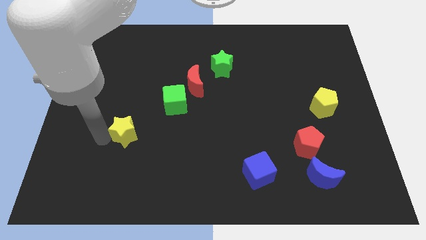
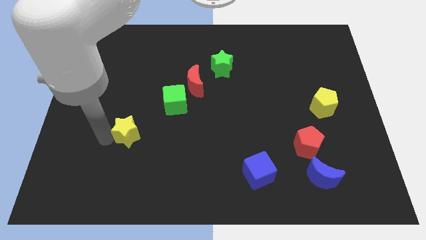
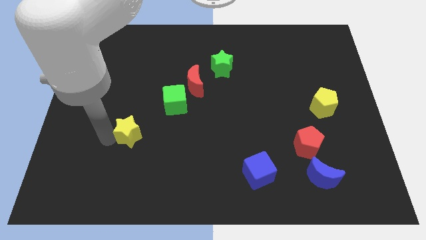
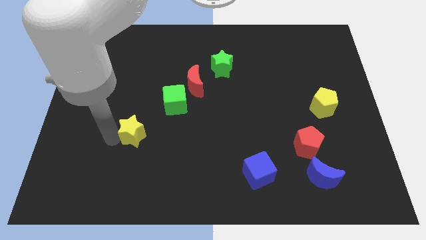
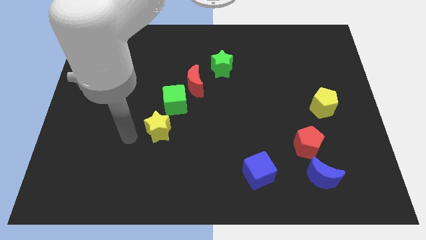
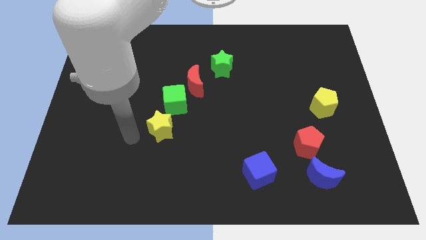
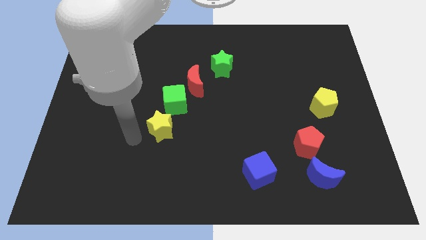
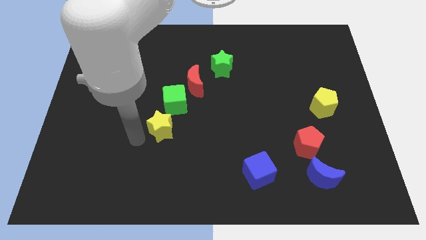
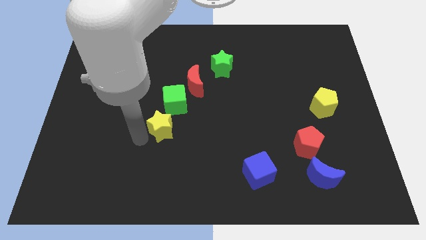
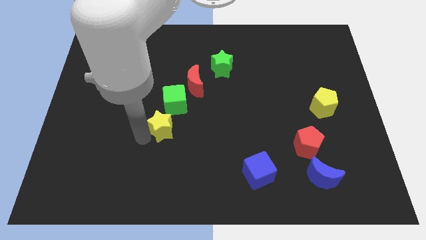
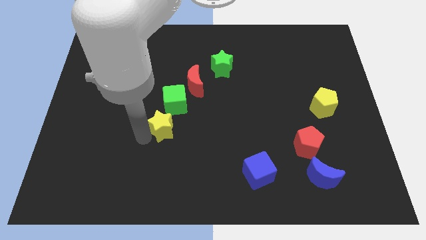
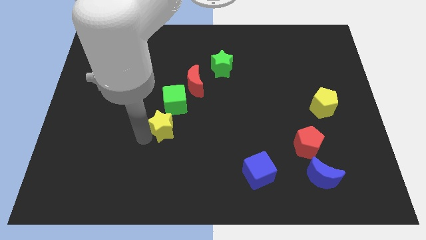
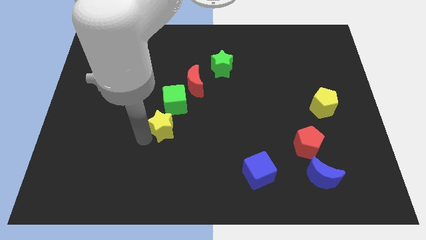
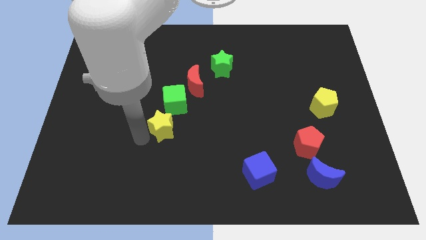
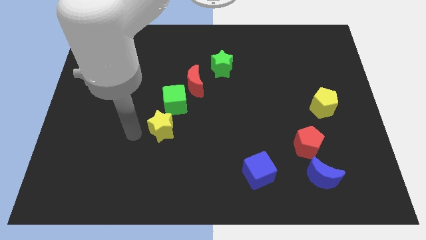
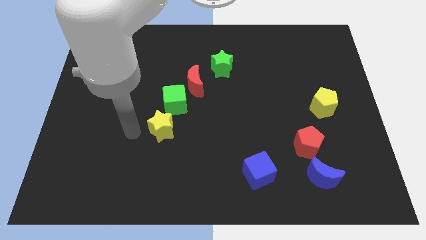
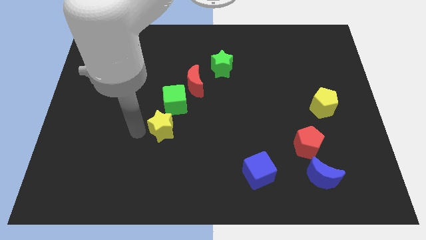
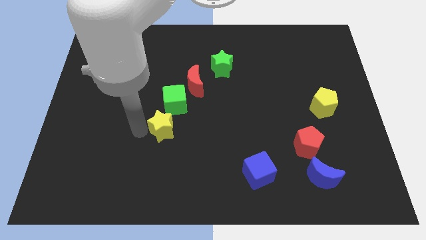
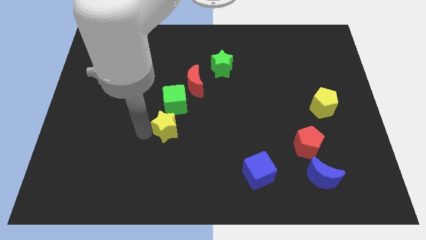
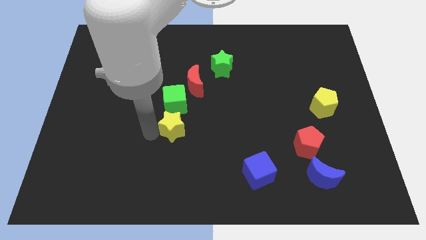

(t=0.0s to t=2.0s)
push the yellow star to the bottom of the green cube

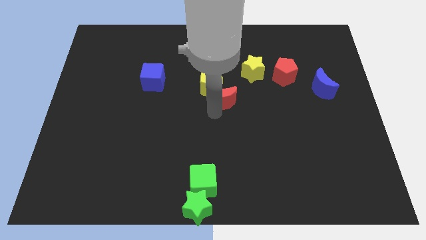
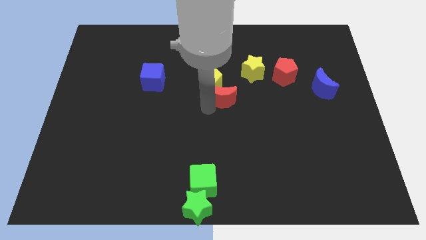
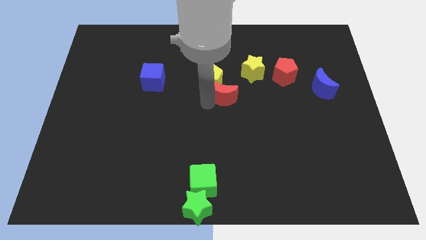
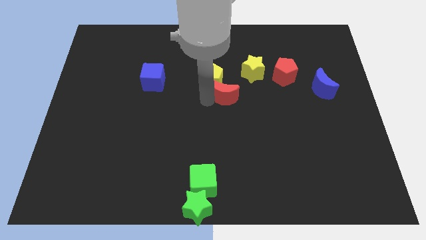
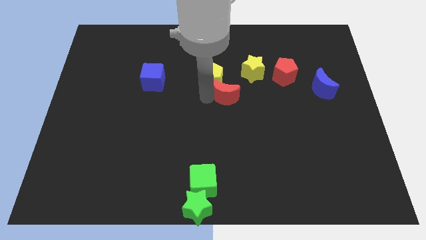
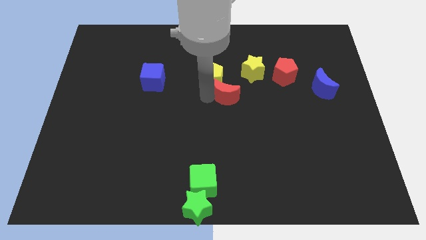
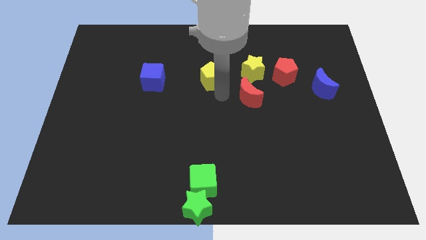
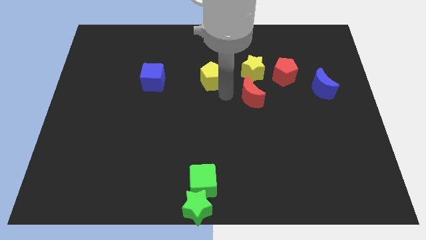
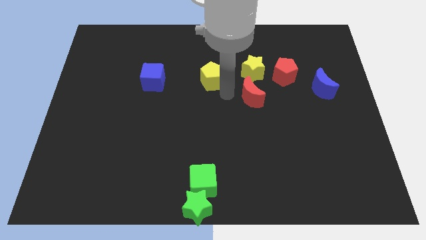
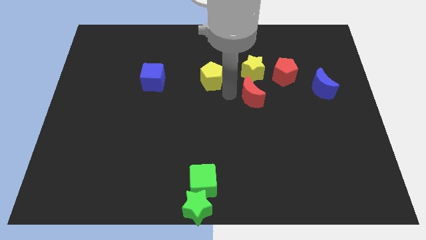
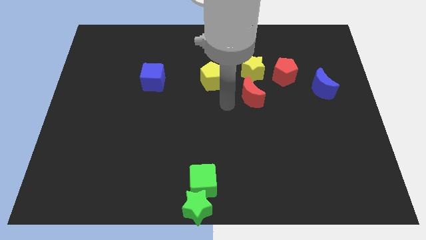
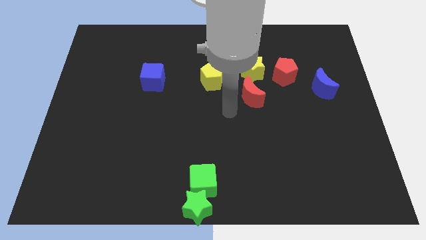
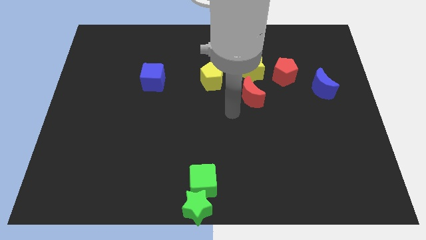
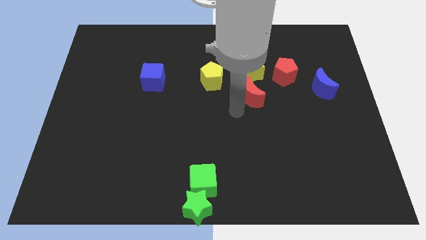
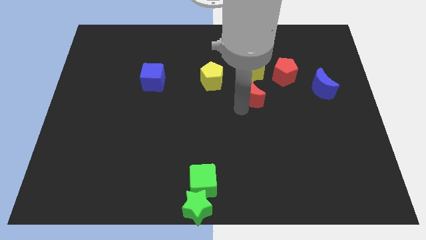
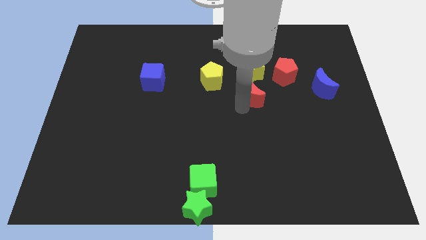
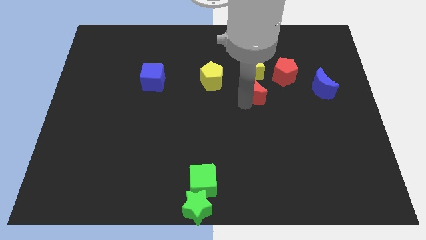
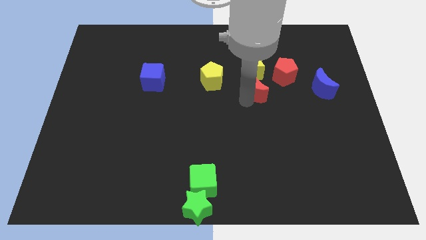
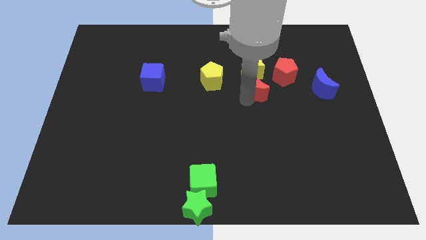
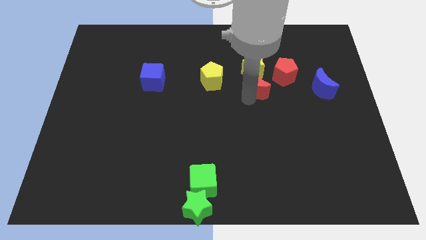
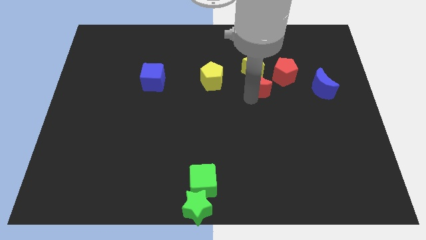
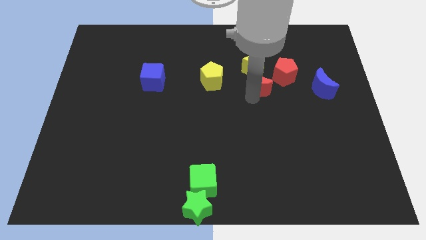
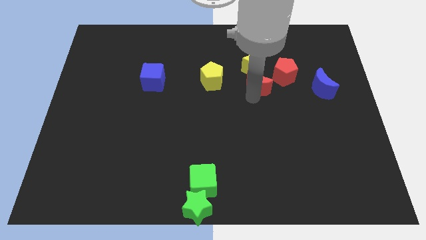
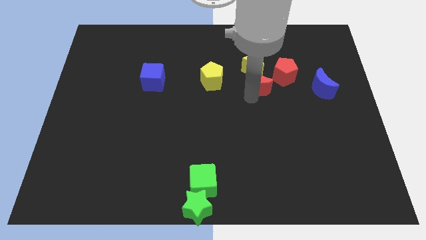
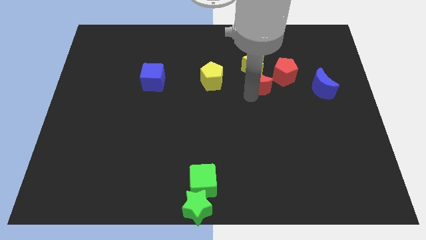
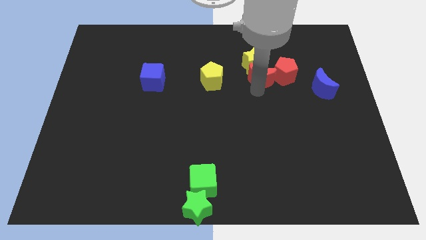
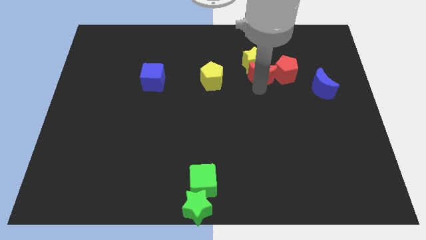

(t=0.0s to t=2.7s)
push the red moon into the yellow star

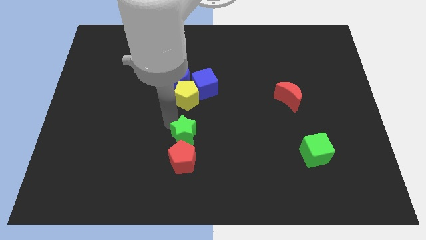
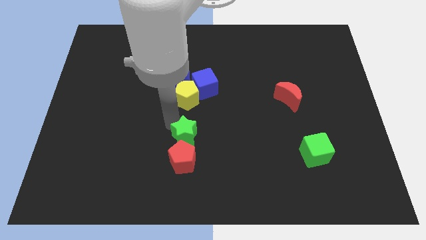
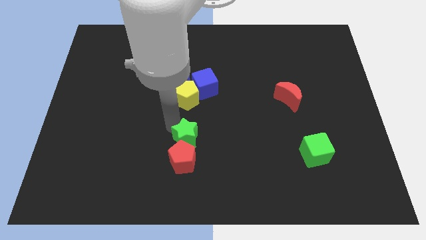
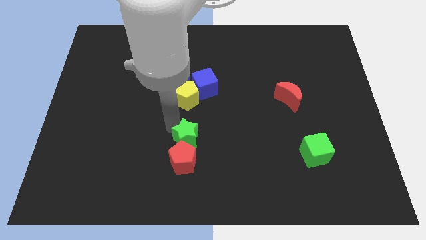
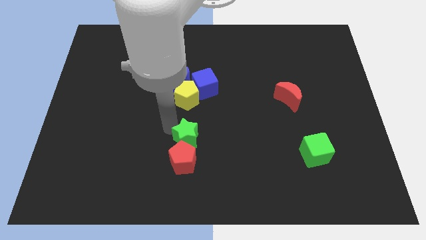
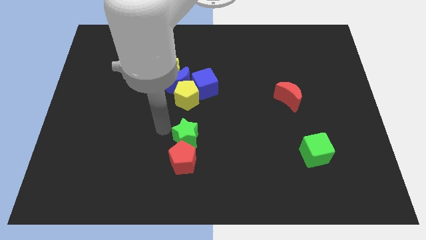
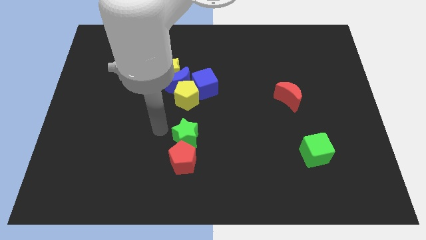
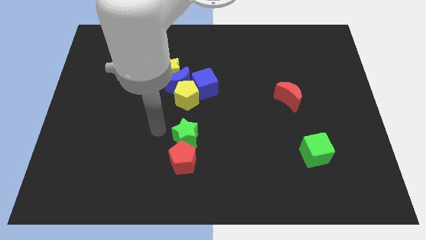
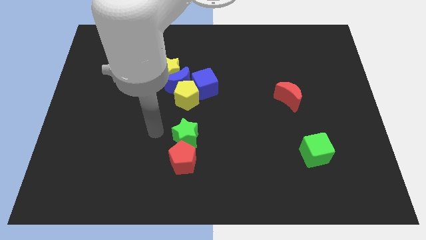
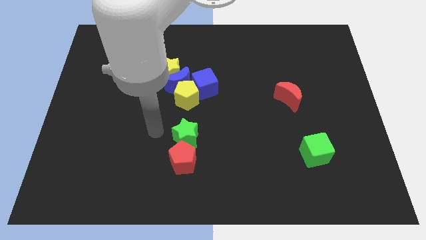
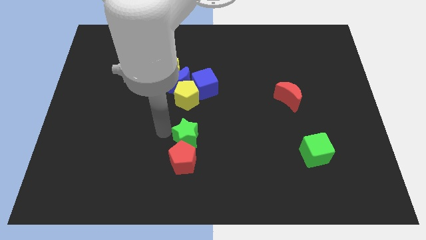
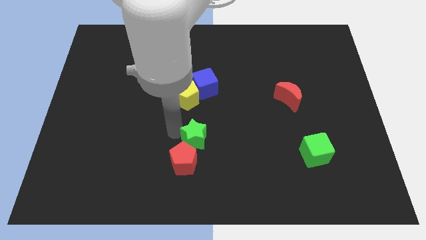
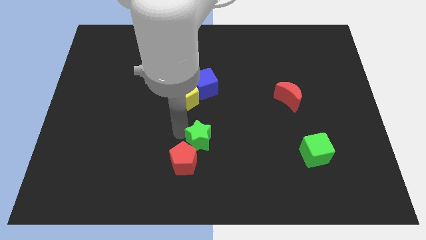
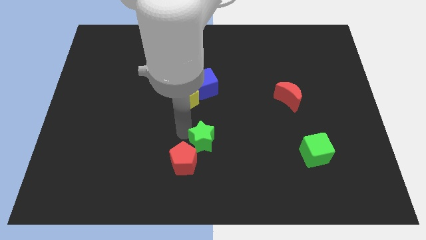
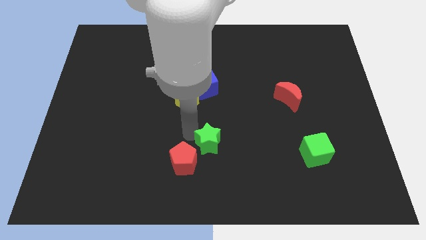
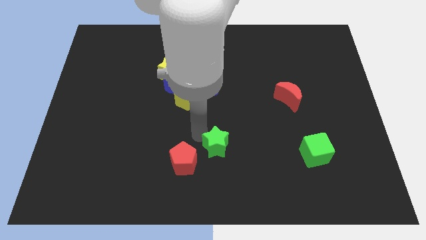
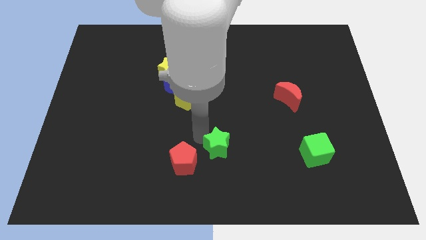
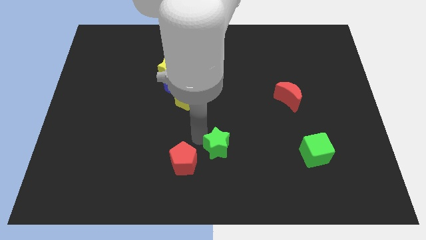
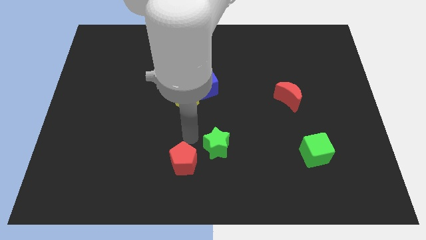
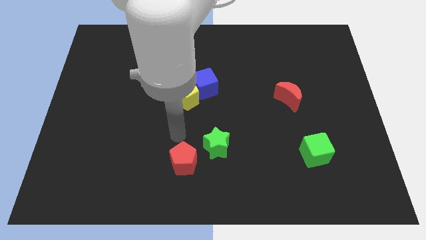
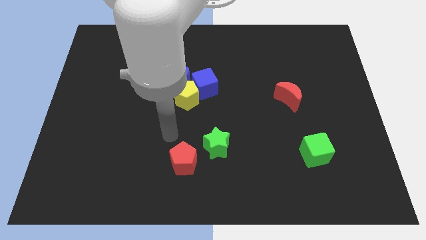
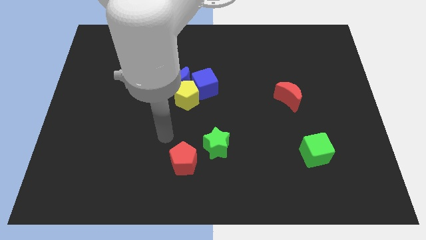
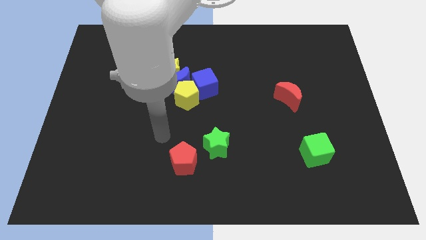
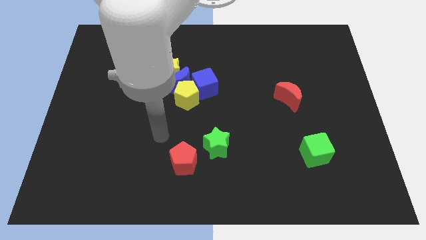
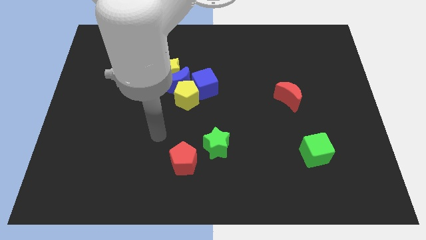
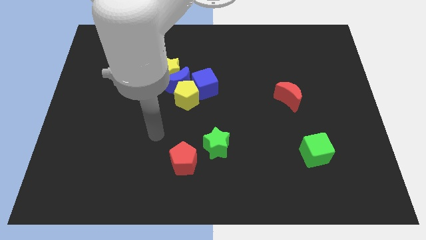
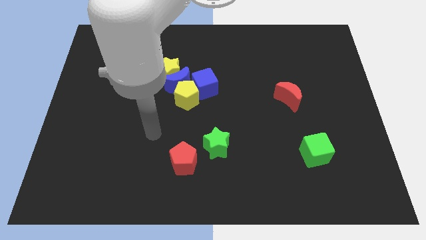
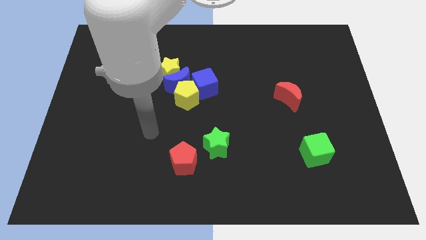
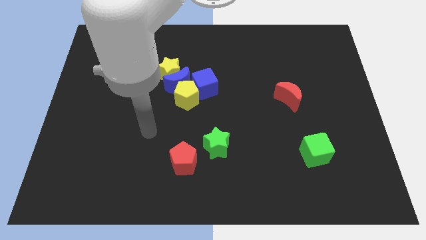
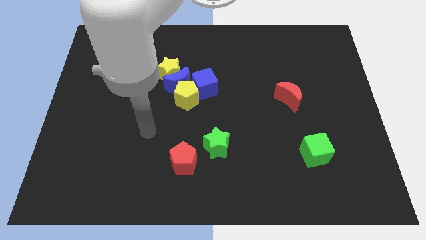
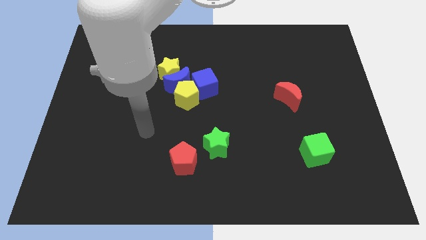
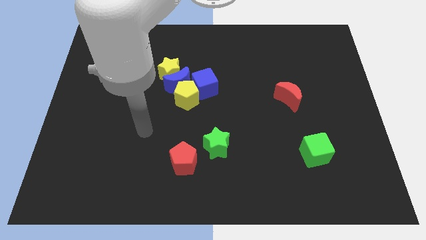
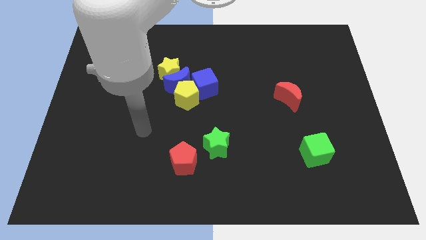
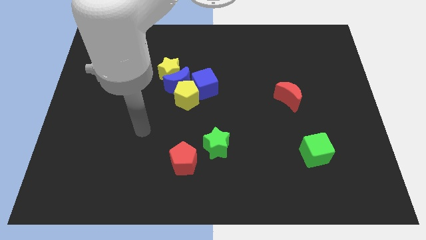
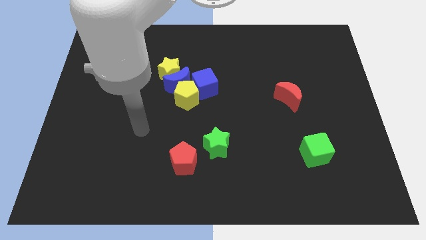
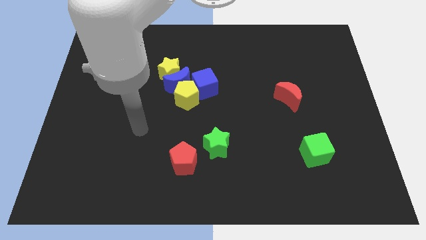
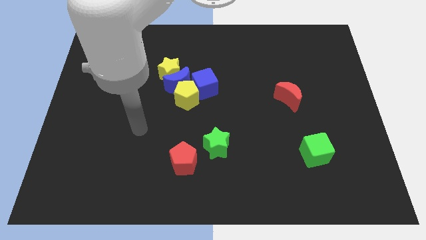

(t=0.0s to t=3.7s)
move green star to the right side

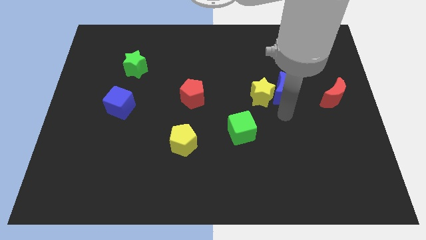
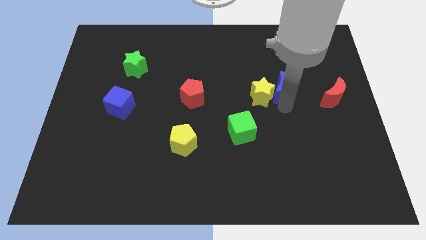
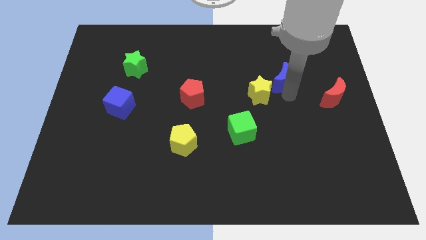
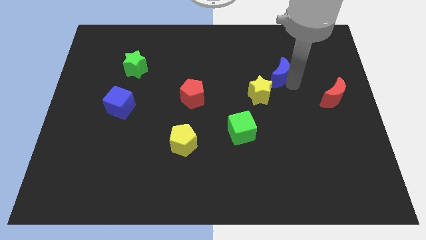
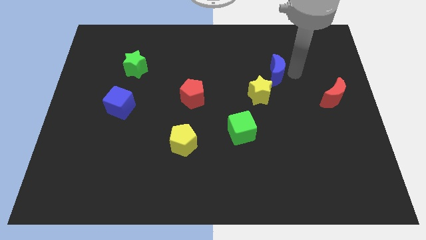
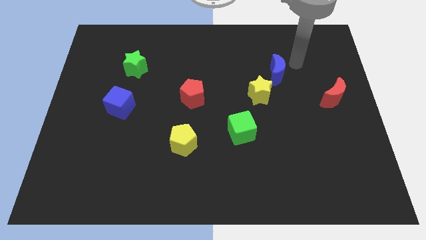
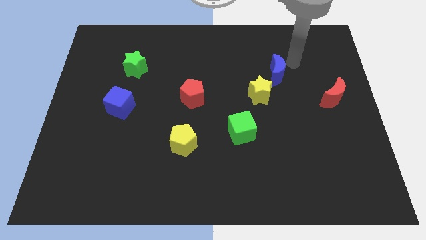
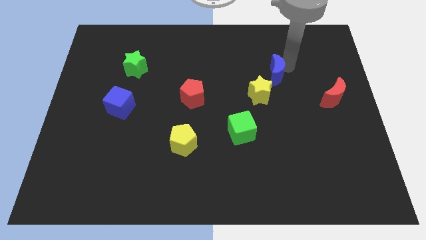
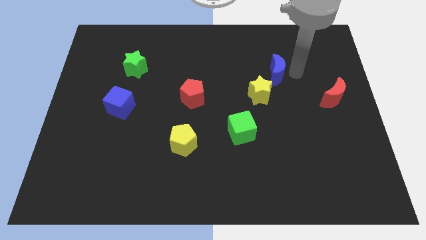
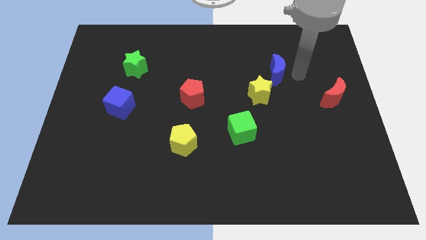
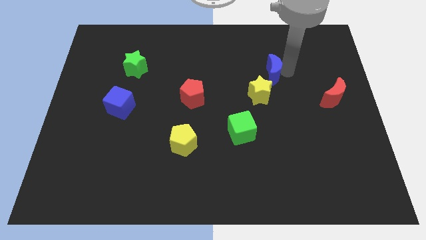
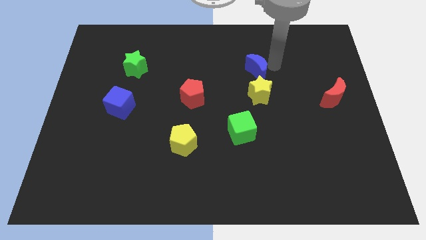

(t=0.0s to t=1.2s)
slide blue moon to the top right of yellow star
